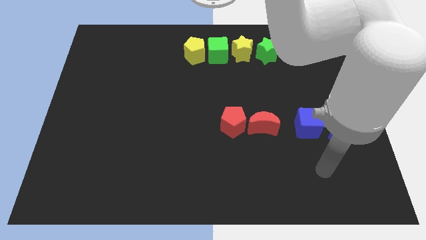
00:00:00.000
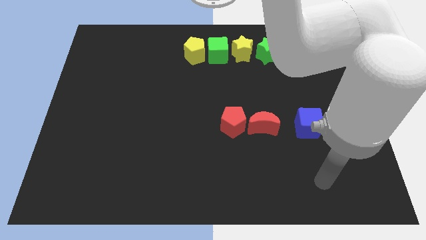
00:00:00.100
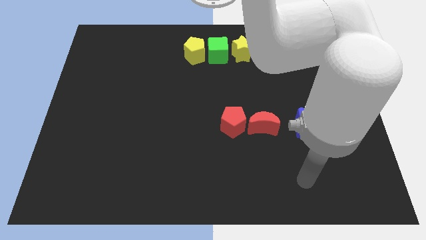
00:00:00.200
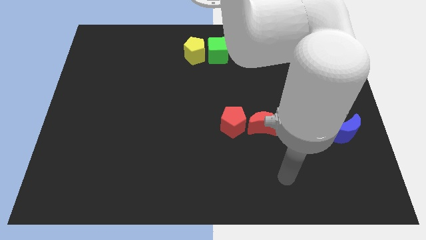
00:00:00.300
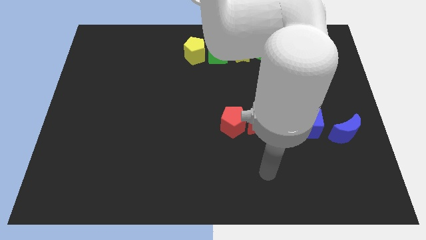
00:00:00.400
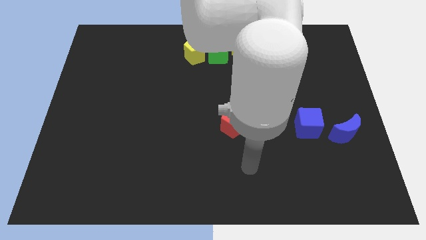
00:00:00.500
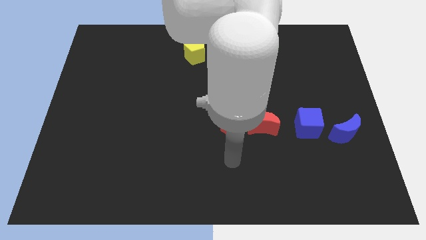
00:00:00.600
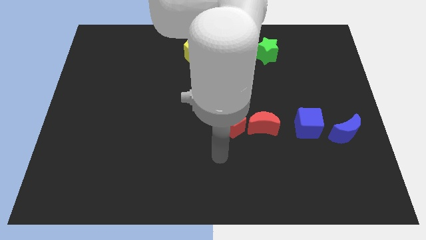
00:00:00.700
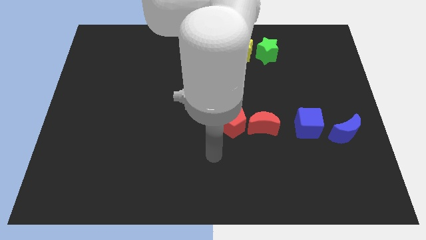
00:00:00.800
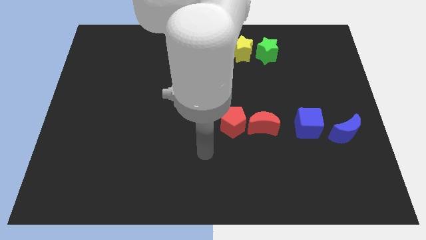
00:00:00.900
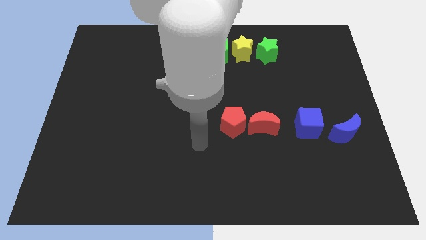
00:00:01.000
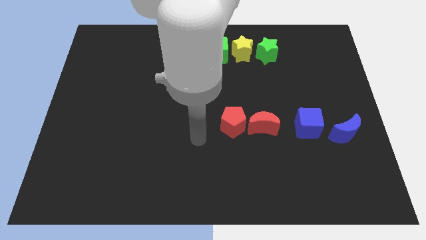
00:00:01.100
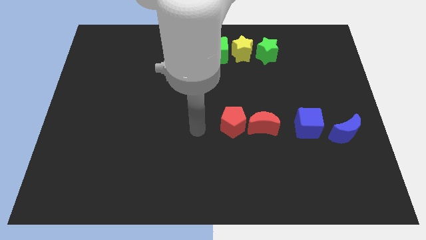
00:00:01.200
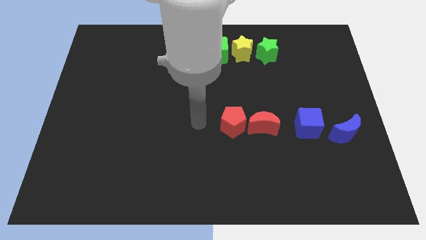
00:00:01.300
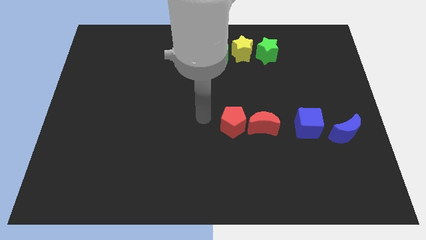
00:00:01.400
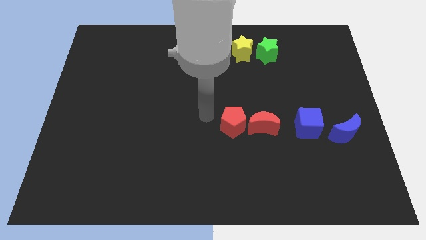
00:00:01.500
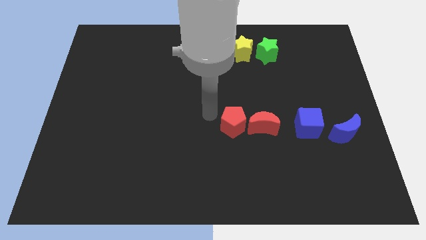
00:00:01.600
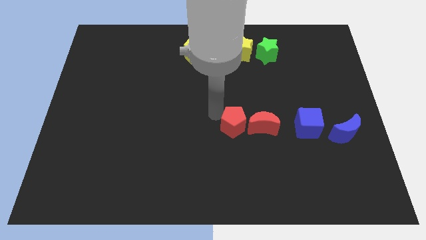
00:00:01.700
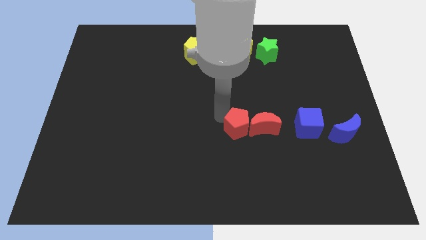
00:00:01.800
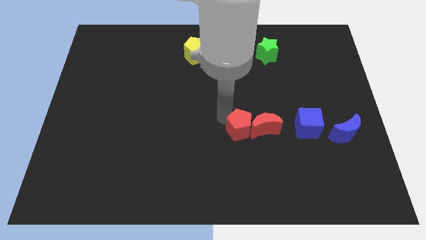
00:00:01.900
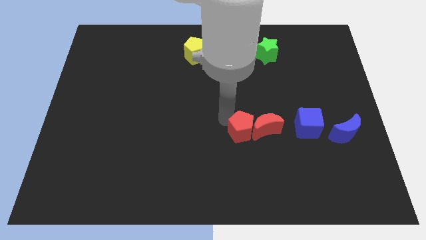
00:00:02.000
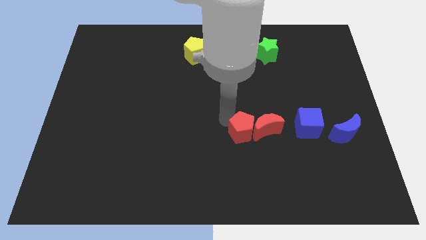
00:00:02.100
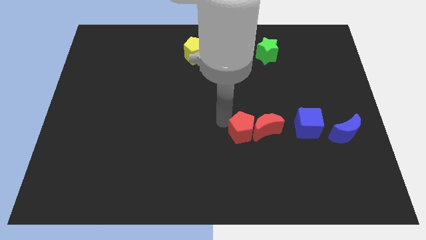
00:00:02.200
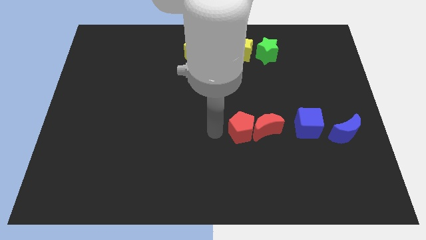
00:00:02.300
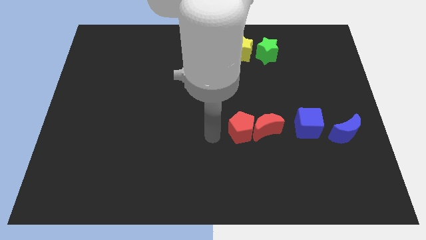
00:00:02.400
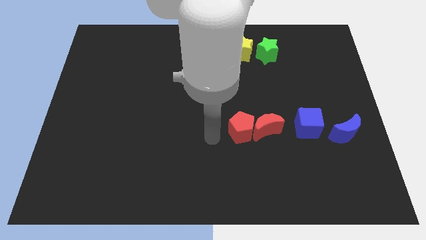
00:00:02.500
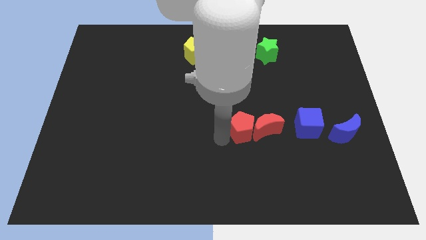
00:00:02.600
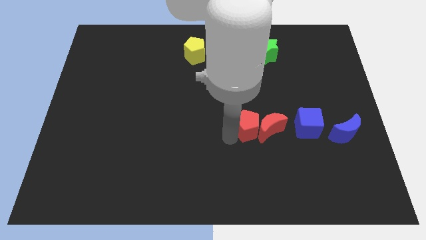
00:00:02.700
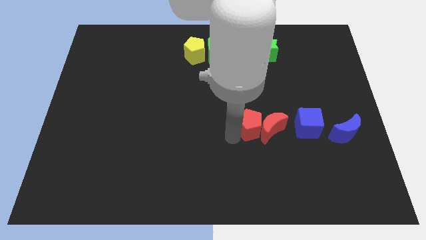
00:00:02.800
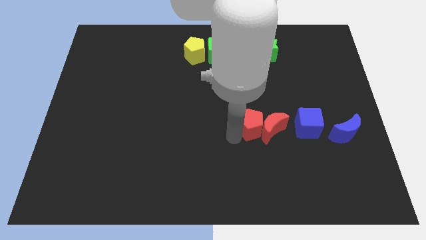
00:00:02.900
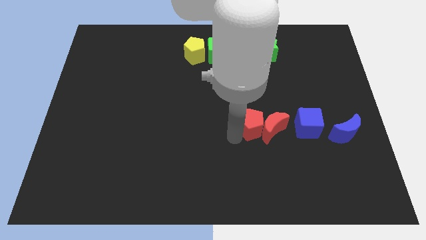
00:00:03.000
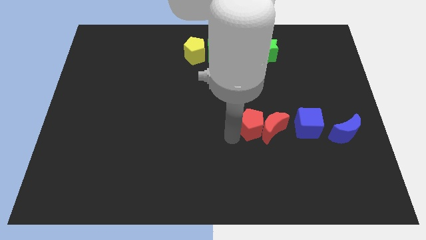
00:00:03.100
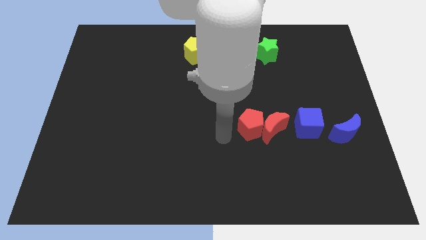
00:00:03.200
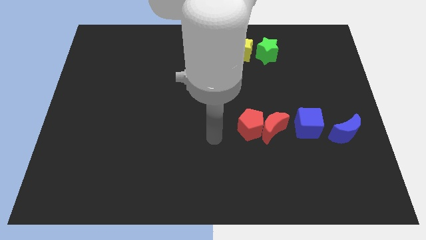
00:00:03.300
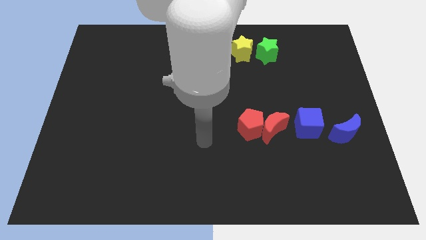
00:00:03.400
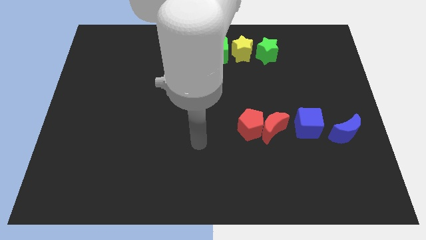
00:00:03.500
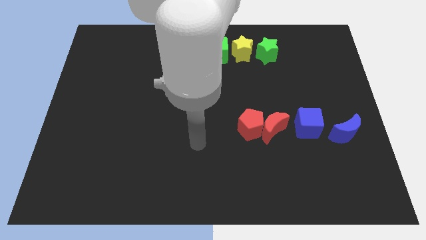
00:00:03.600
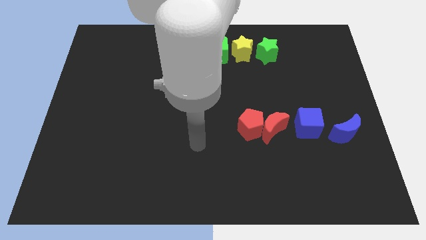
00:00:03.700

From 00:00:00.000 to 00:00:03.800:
move both red blocks into blue cube

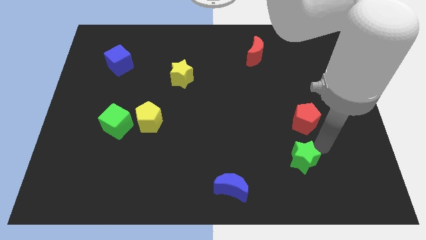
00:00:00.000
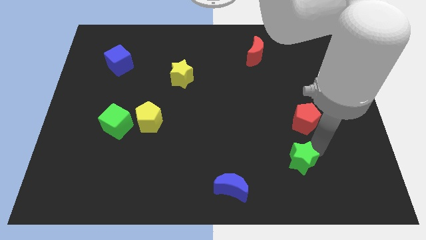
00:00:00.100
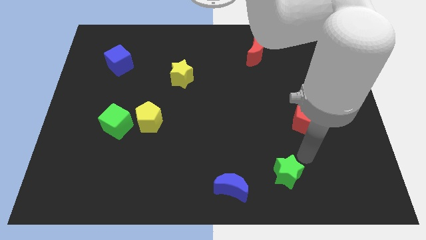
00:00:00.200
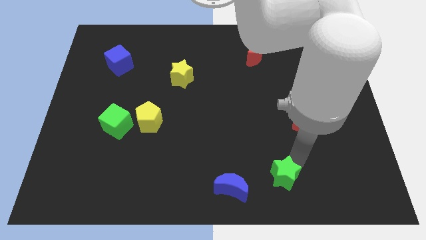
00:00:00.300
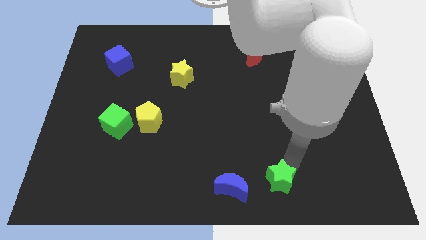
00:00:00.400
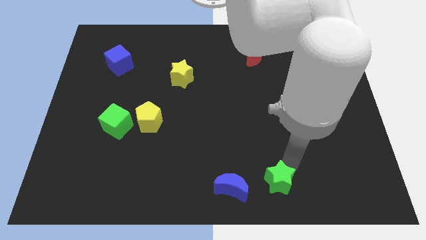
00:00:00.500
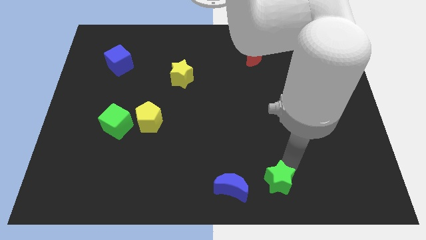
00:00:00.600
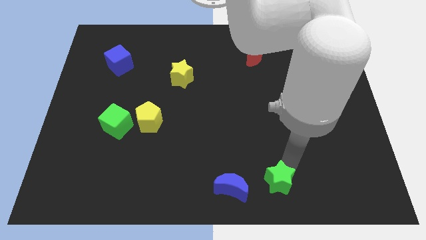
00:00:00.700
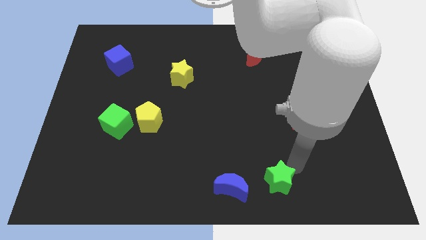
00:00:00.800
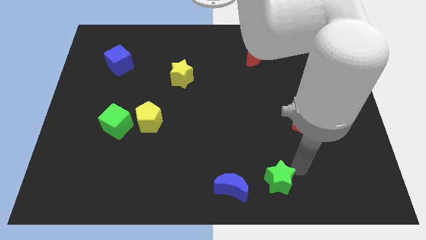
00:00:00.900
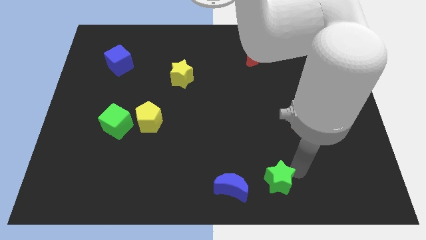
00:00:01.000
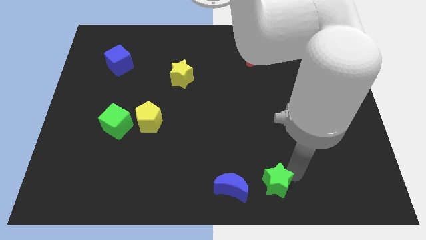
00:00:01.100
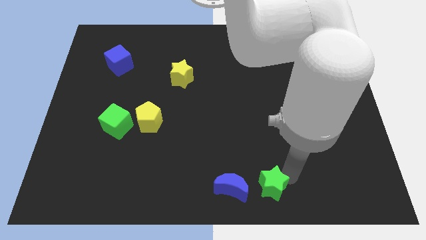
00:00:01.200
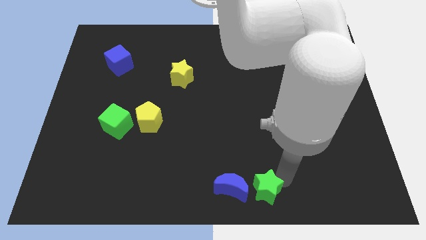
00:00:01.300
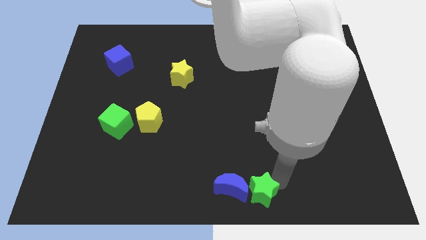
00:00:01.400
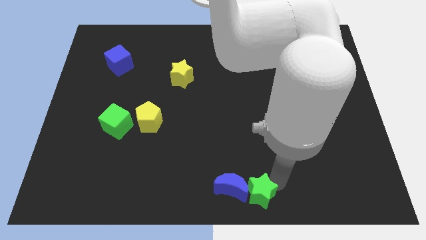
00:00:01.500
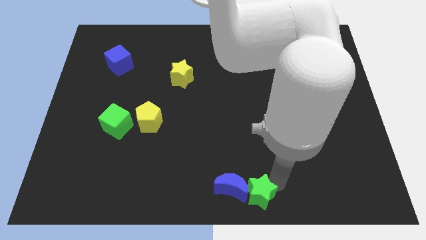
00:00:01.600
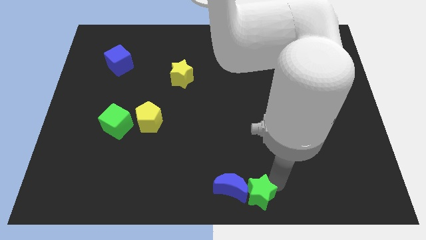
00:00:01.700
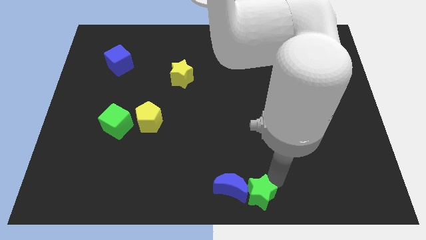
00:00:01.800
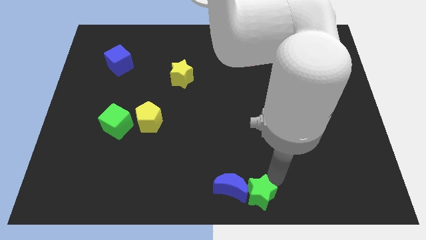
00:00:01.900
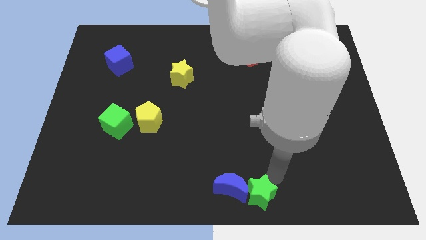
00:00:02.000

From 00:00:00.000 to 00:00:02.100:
push the green star towards the blue moon

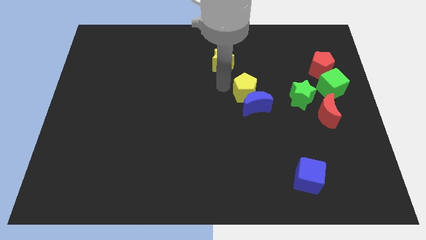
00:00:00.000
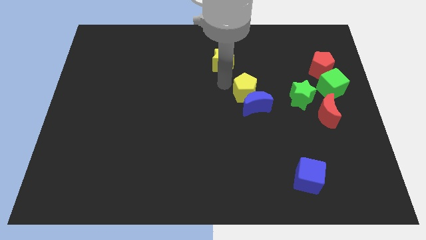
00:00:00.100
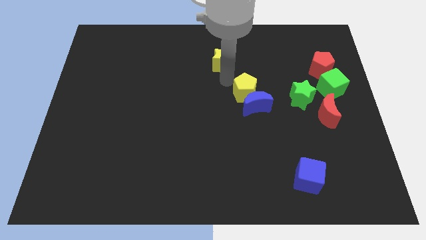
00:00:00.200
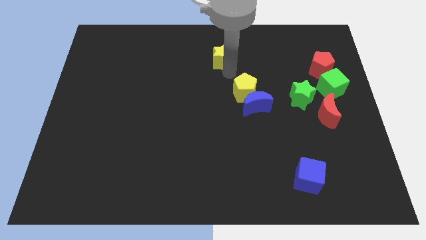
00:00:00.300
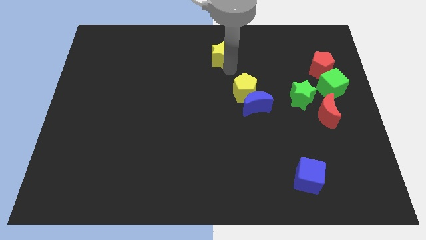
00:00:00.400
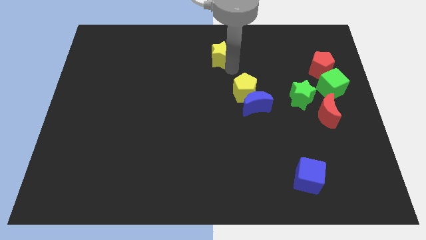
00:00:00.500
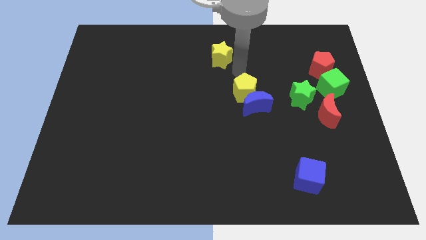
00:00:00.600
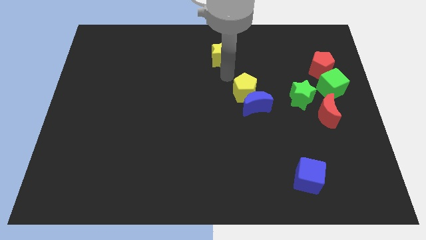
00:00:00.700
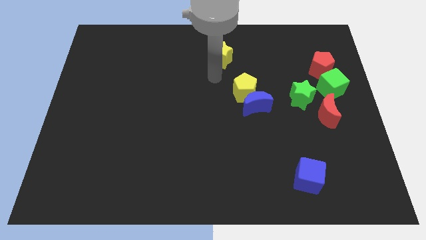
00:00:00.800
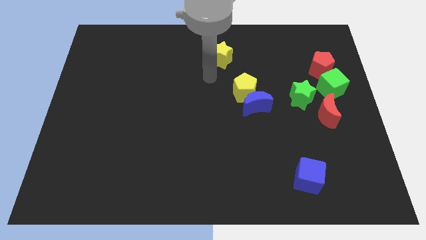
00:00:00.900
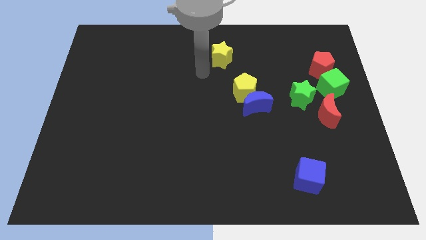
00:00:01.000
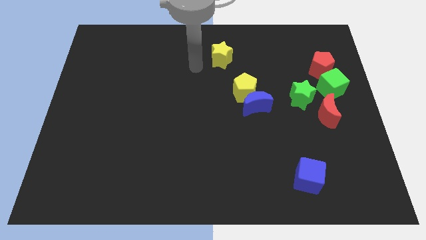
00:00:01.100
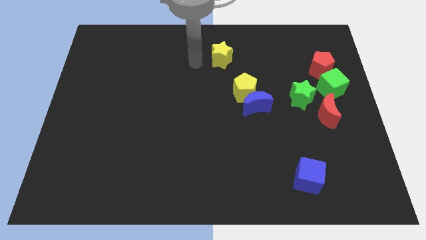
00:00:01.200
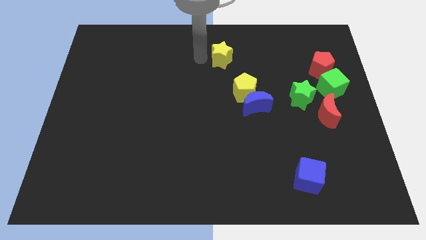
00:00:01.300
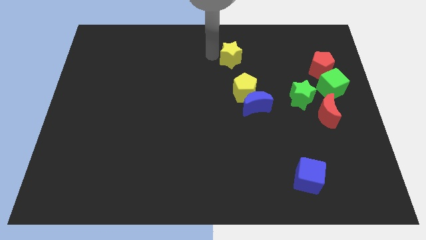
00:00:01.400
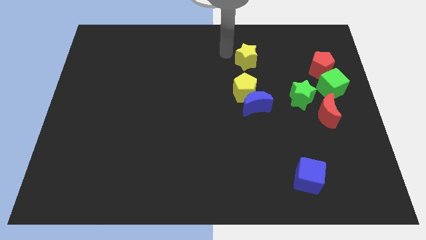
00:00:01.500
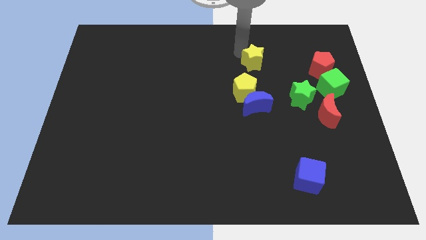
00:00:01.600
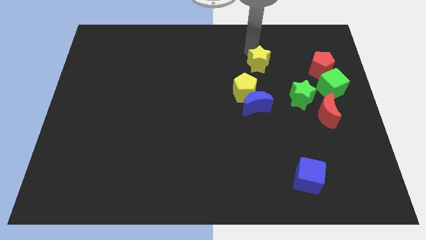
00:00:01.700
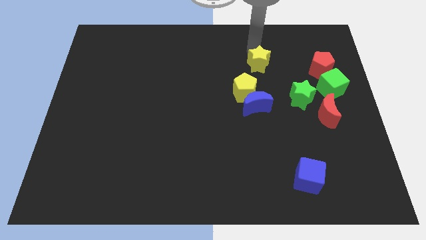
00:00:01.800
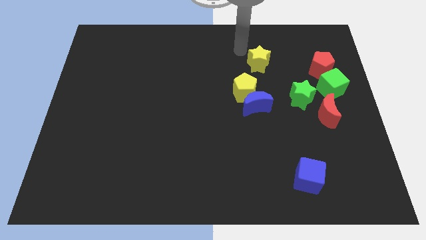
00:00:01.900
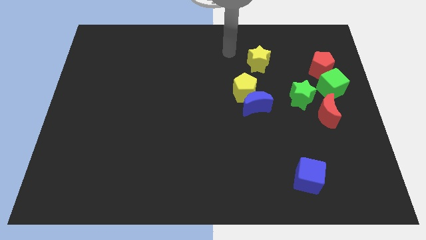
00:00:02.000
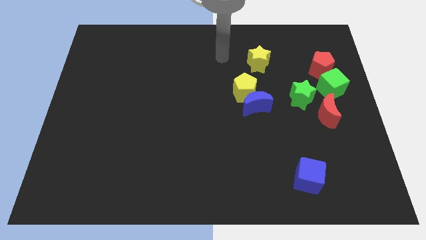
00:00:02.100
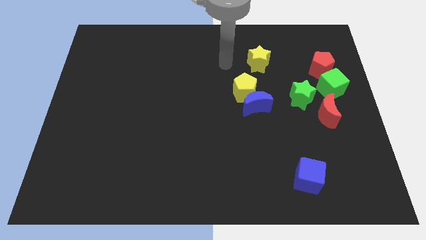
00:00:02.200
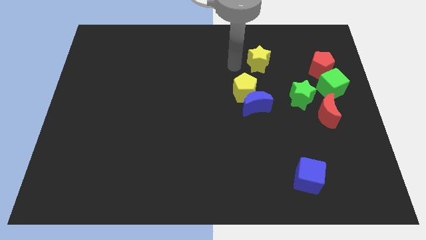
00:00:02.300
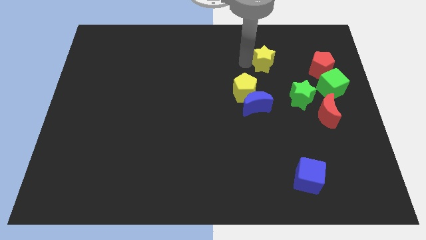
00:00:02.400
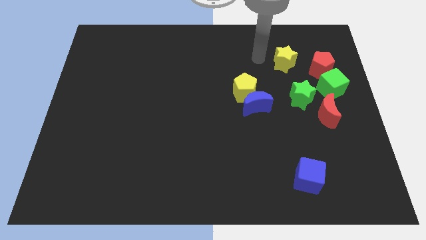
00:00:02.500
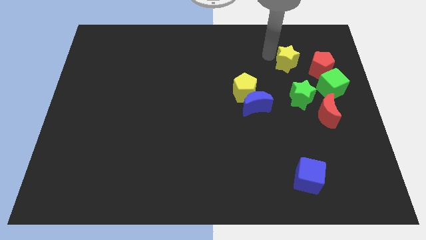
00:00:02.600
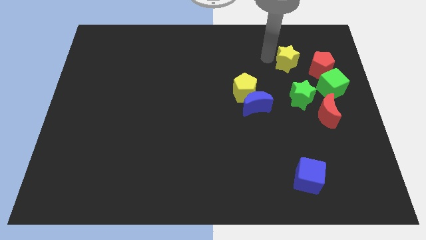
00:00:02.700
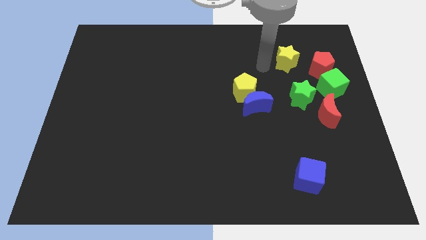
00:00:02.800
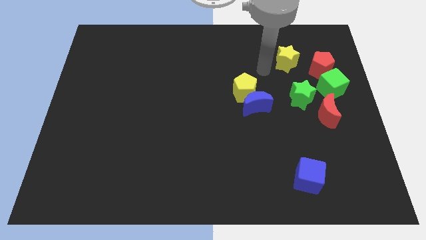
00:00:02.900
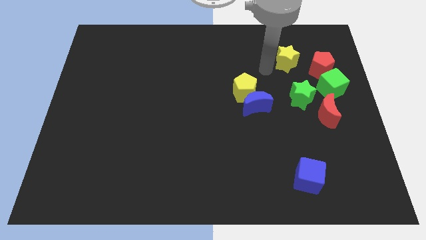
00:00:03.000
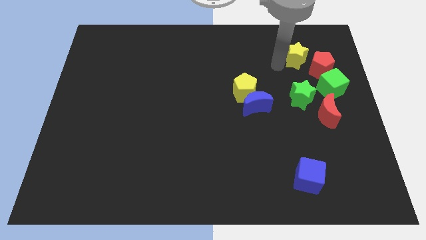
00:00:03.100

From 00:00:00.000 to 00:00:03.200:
push yellow star above green star
